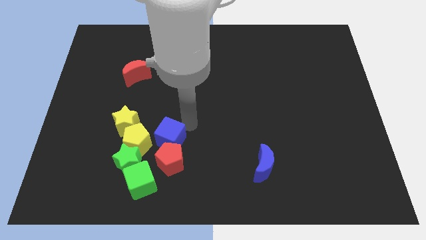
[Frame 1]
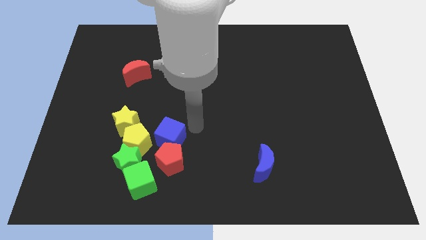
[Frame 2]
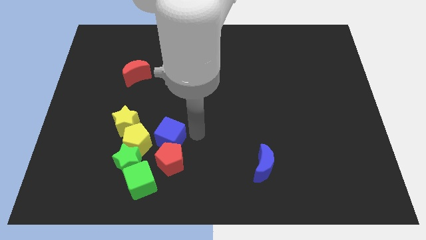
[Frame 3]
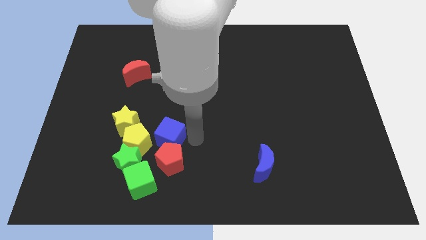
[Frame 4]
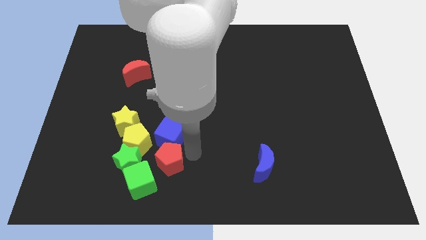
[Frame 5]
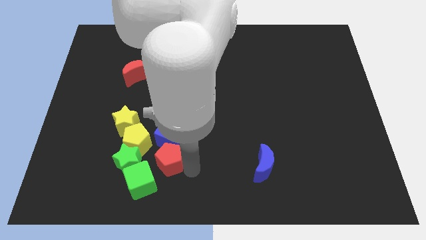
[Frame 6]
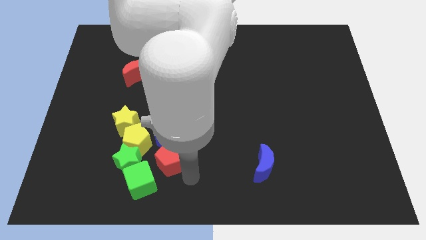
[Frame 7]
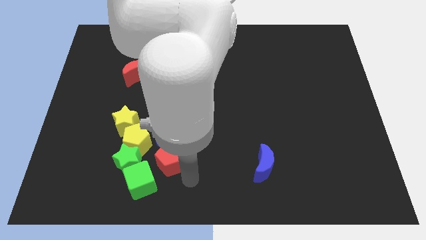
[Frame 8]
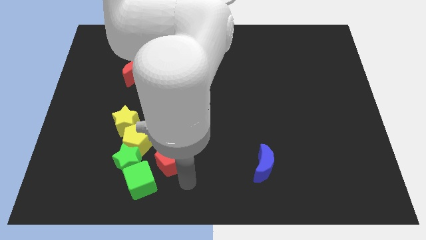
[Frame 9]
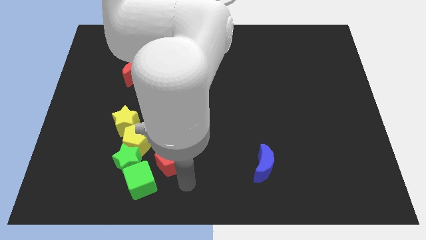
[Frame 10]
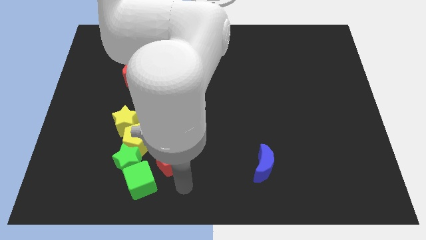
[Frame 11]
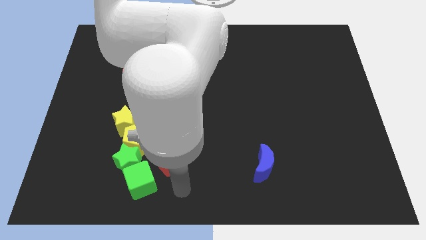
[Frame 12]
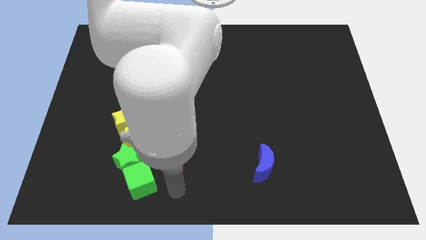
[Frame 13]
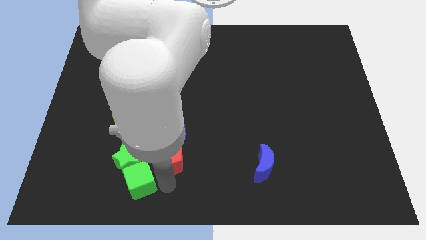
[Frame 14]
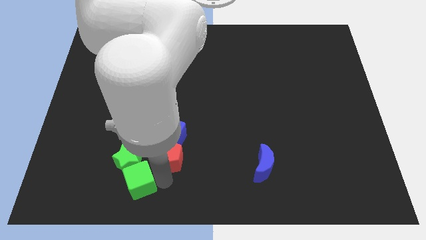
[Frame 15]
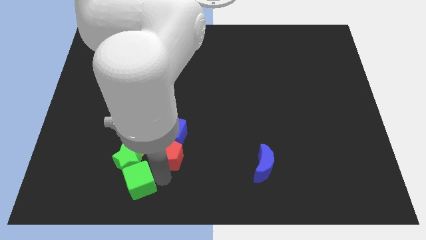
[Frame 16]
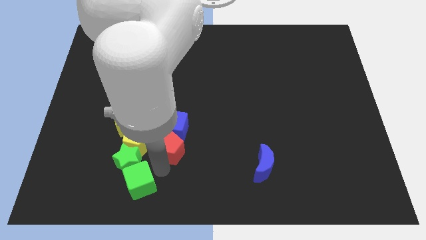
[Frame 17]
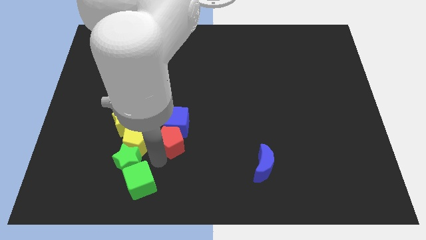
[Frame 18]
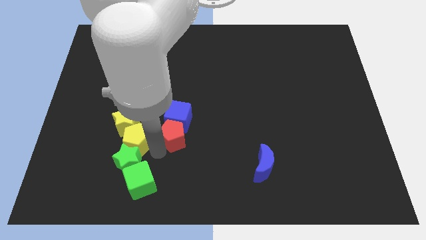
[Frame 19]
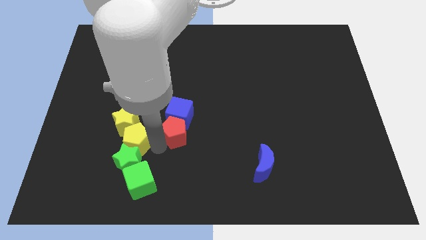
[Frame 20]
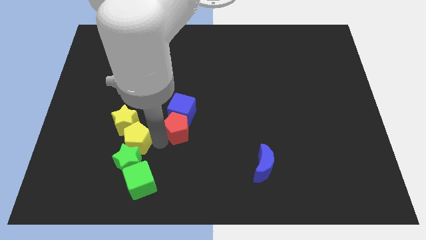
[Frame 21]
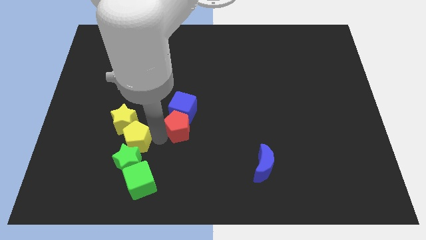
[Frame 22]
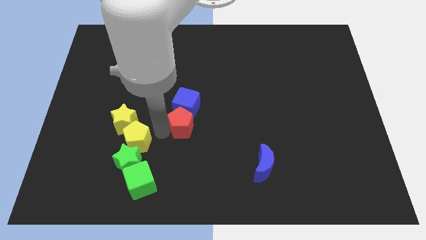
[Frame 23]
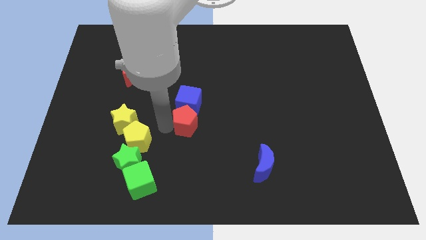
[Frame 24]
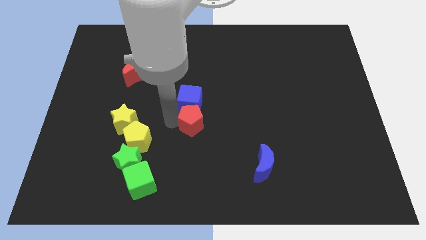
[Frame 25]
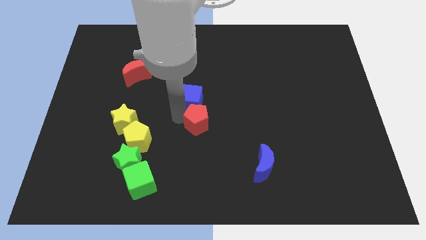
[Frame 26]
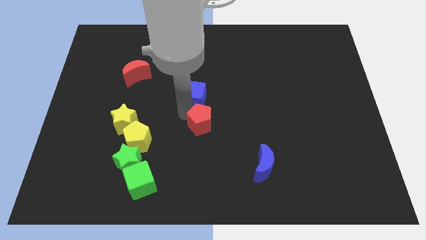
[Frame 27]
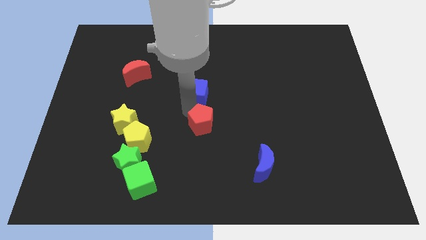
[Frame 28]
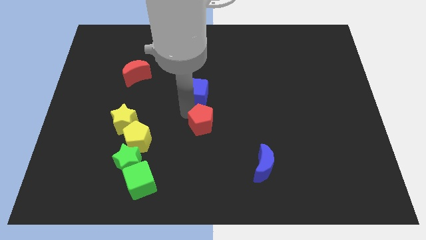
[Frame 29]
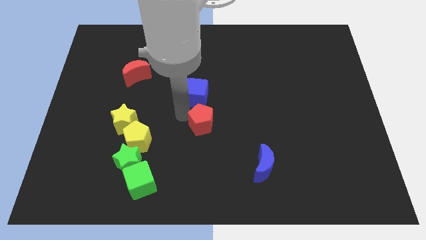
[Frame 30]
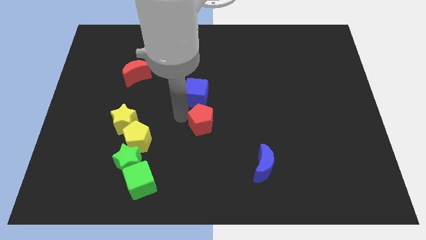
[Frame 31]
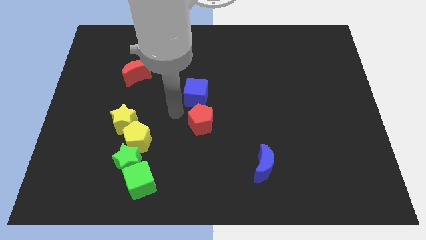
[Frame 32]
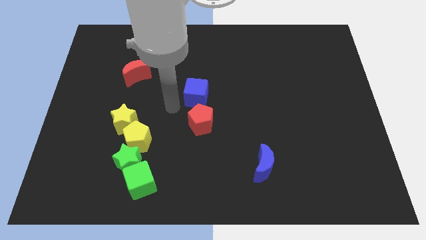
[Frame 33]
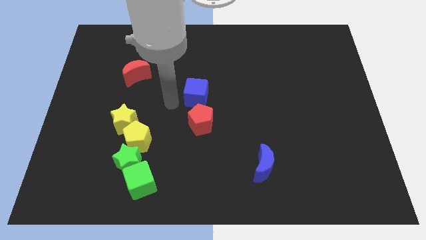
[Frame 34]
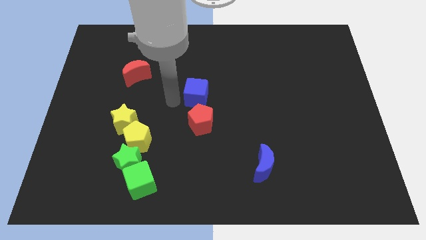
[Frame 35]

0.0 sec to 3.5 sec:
push the red pentagon and blue cube upwards

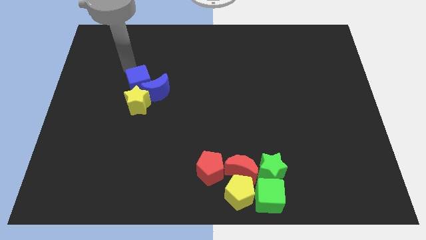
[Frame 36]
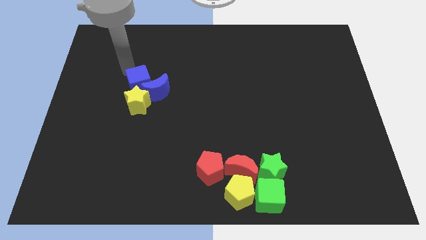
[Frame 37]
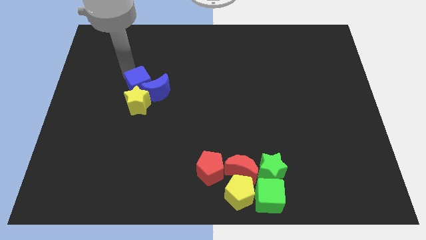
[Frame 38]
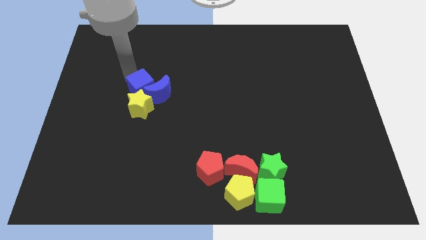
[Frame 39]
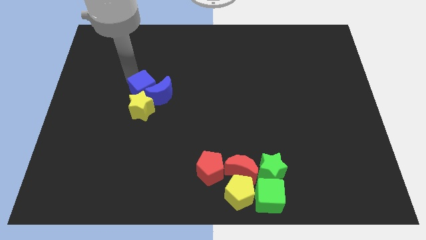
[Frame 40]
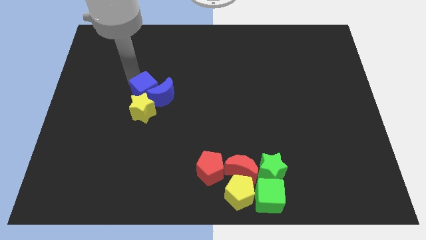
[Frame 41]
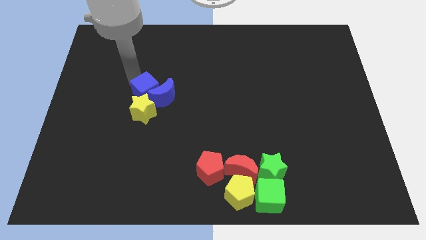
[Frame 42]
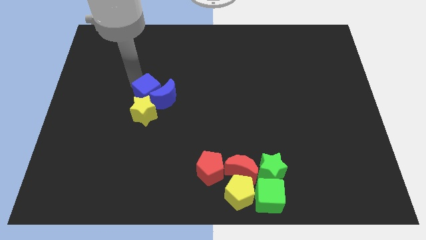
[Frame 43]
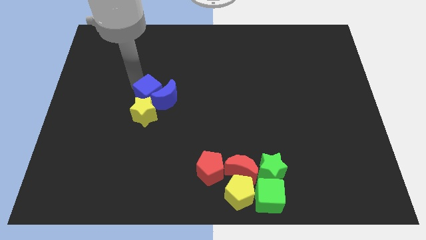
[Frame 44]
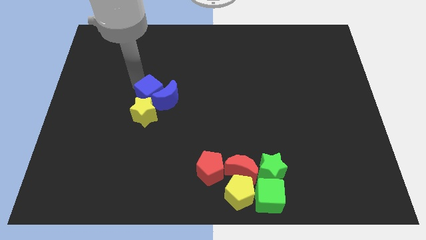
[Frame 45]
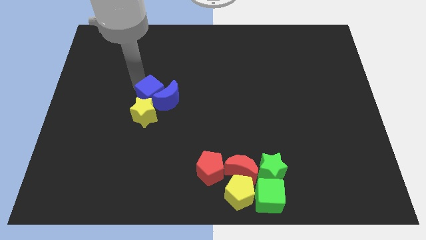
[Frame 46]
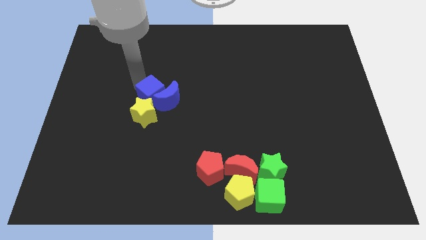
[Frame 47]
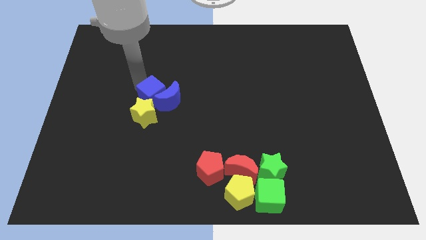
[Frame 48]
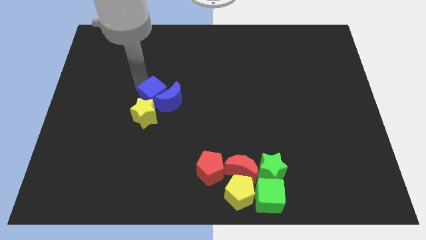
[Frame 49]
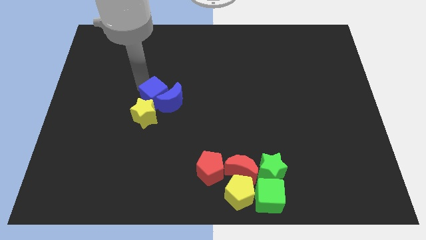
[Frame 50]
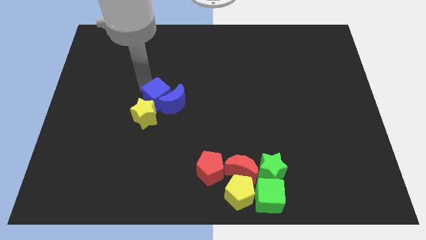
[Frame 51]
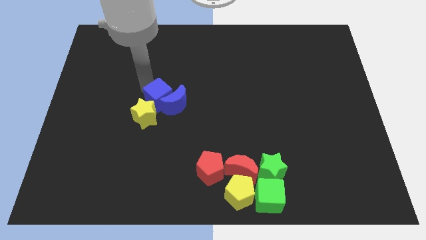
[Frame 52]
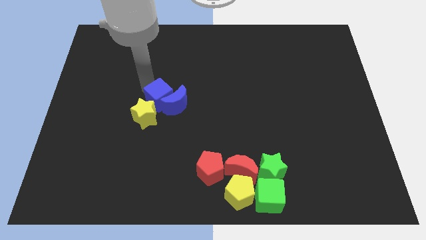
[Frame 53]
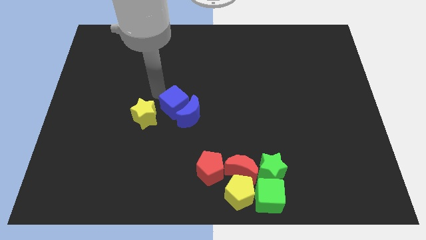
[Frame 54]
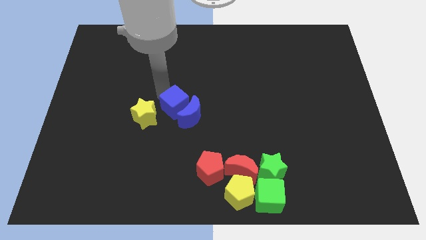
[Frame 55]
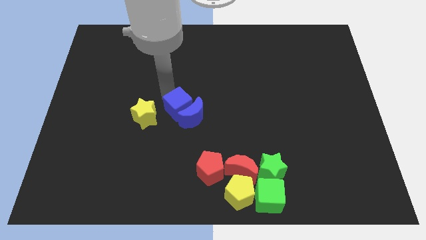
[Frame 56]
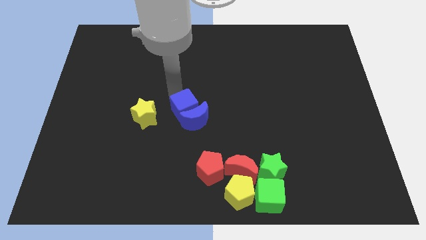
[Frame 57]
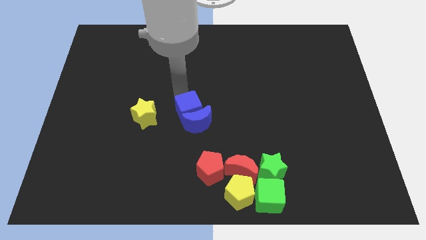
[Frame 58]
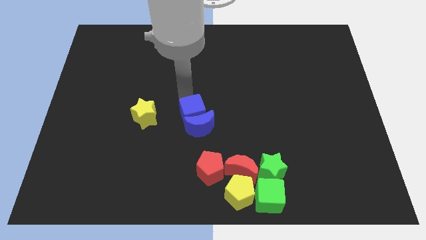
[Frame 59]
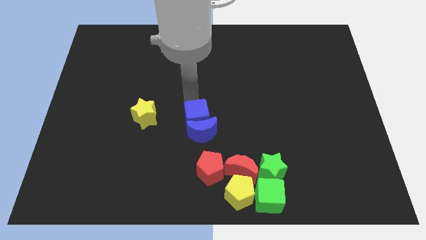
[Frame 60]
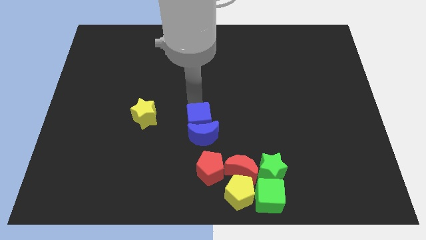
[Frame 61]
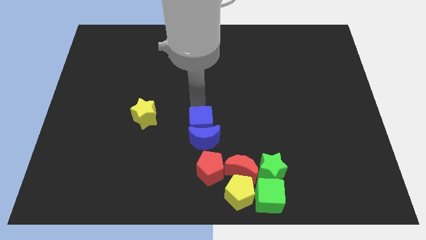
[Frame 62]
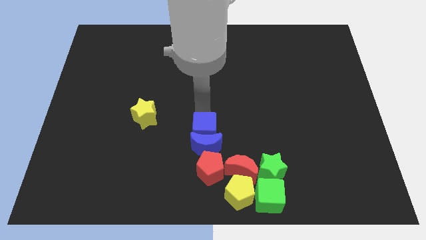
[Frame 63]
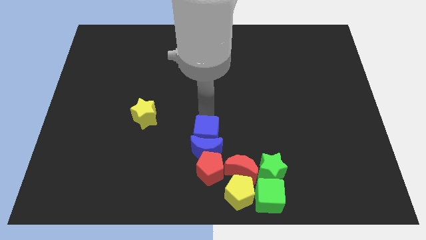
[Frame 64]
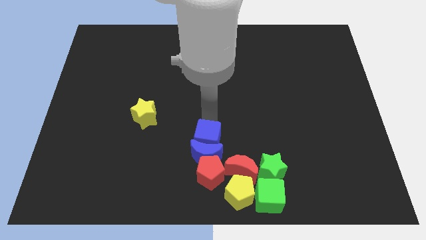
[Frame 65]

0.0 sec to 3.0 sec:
move the blue cube and blue moon into top of red pentagon

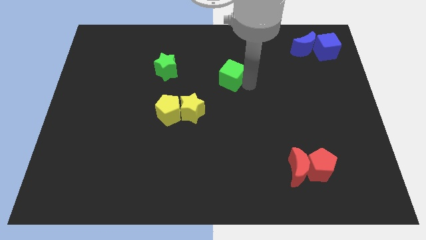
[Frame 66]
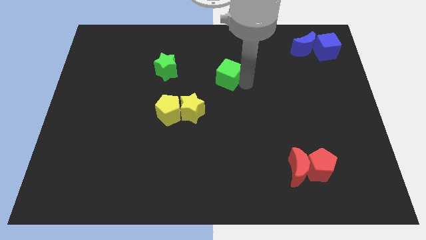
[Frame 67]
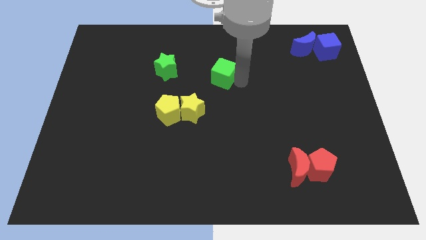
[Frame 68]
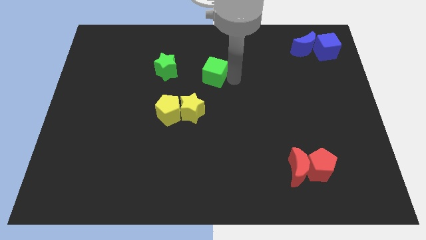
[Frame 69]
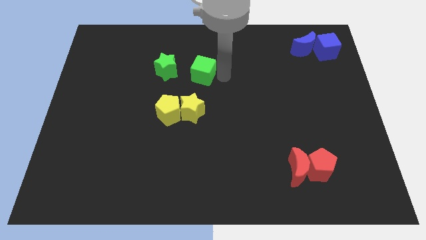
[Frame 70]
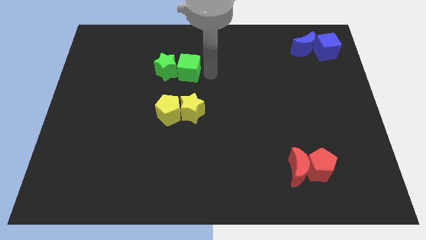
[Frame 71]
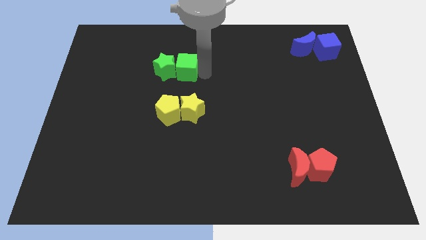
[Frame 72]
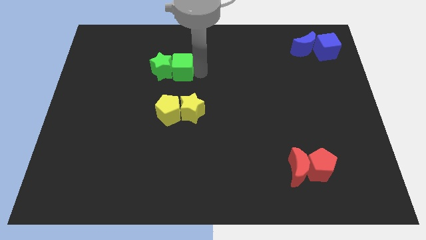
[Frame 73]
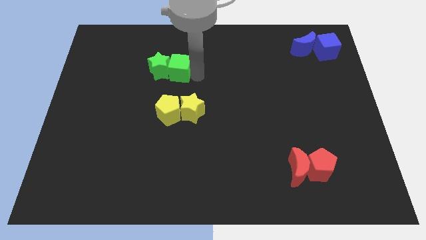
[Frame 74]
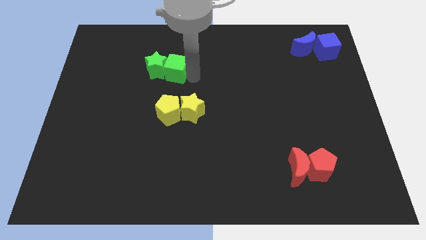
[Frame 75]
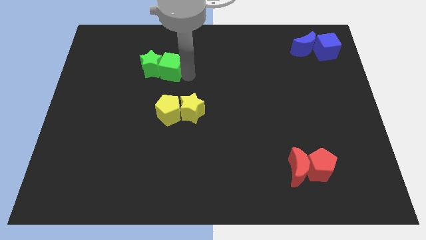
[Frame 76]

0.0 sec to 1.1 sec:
push green cube into green star

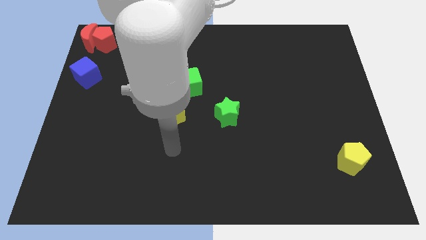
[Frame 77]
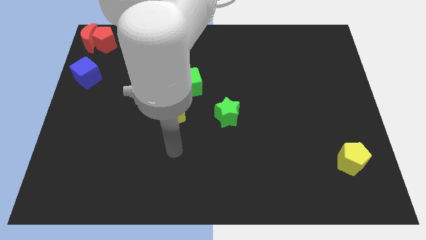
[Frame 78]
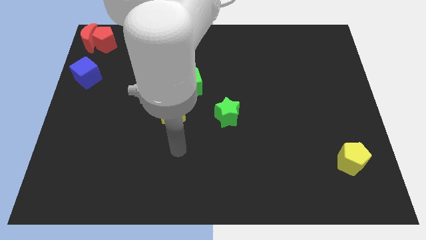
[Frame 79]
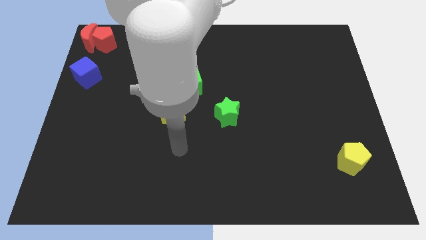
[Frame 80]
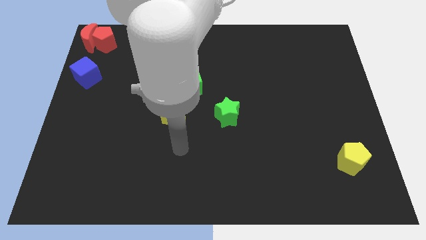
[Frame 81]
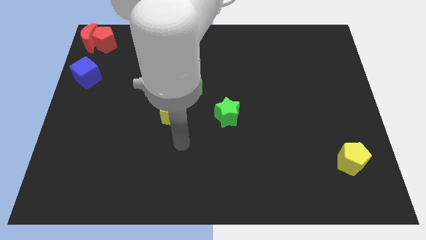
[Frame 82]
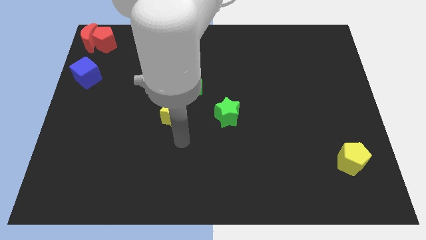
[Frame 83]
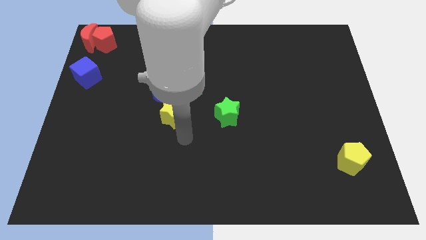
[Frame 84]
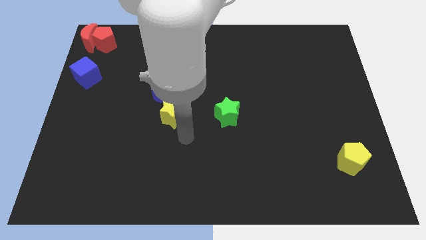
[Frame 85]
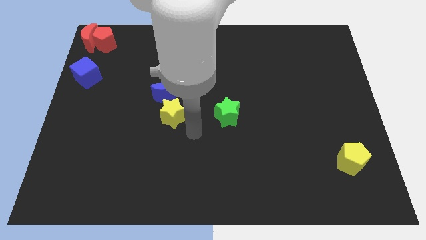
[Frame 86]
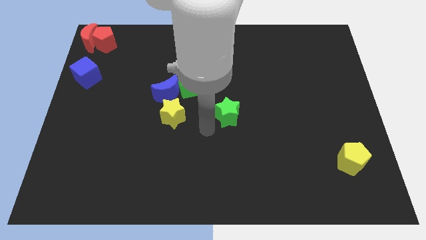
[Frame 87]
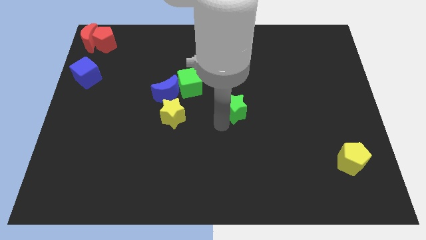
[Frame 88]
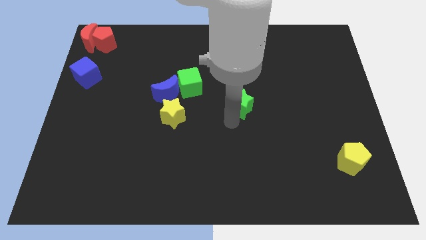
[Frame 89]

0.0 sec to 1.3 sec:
push your arm at the bottom left side of the green star
